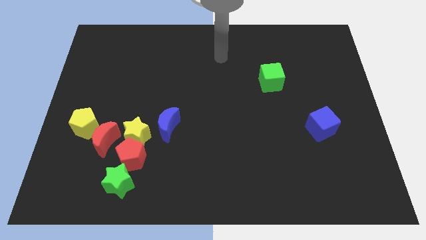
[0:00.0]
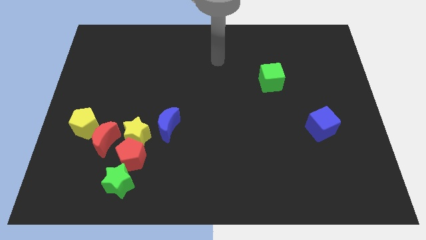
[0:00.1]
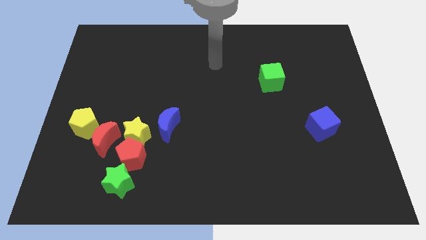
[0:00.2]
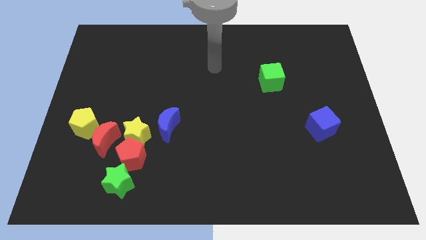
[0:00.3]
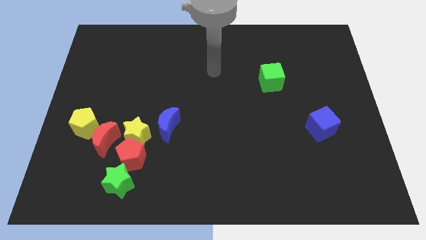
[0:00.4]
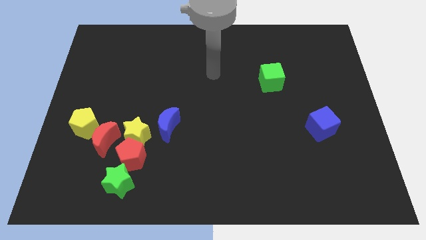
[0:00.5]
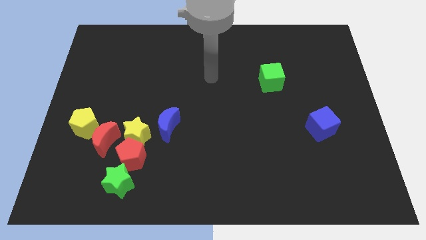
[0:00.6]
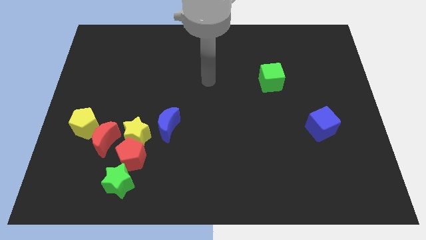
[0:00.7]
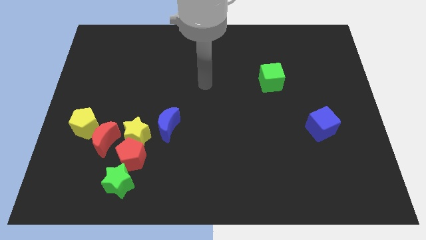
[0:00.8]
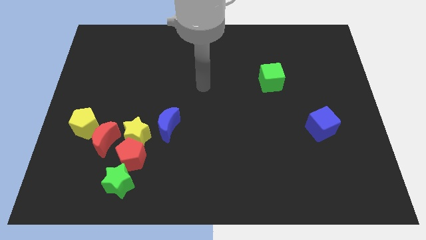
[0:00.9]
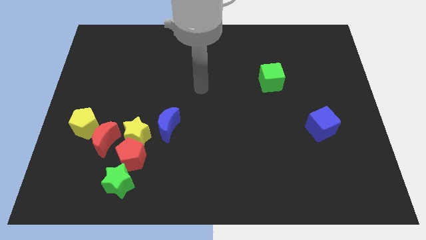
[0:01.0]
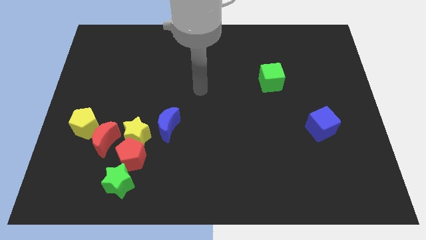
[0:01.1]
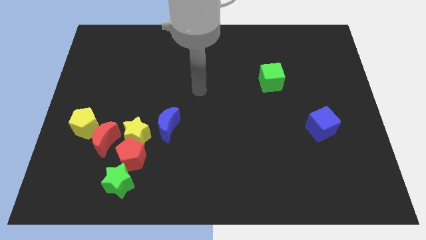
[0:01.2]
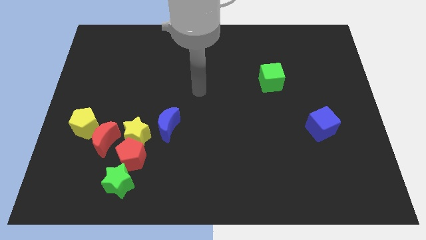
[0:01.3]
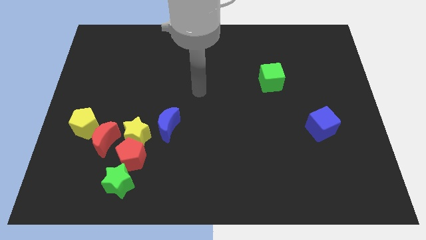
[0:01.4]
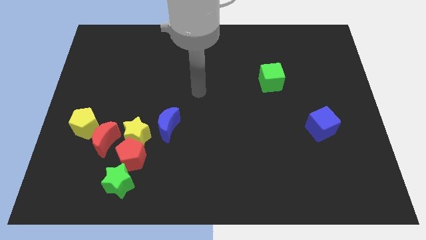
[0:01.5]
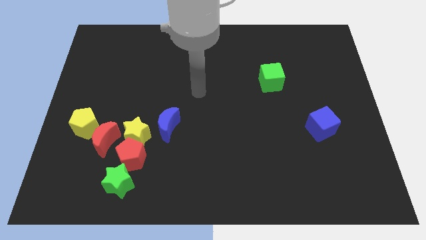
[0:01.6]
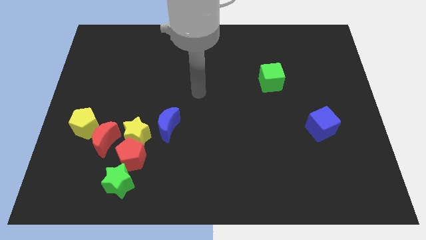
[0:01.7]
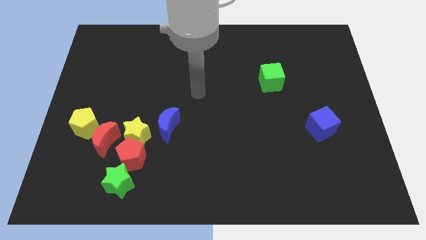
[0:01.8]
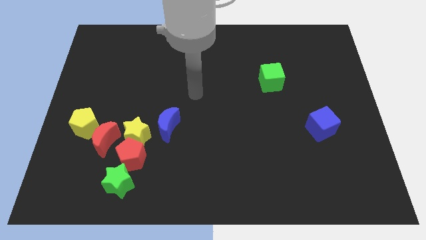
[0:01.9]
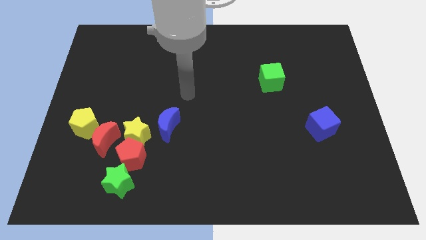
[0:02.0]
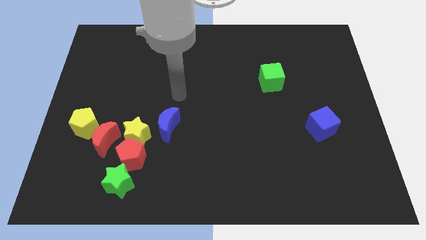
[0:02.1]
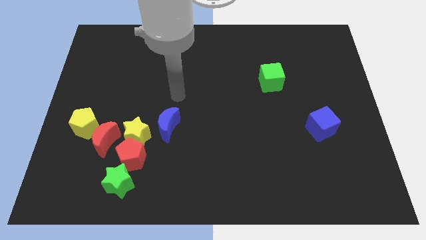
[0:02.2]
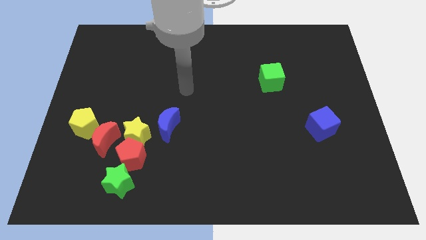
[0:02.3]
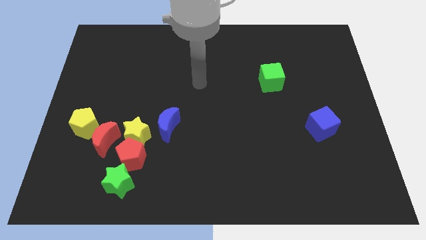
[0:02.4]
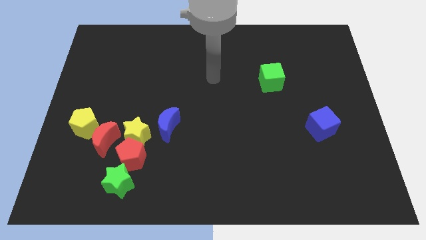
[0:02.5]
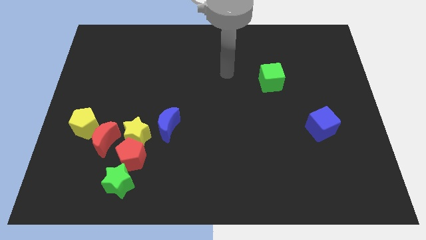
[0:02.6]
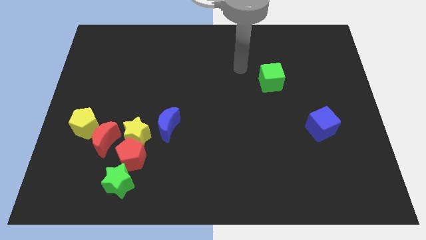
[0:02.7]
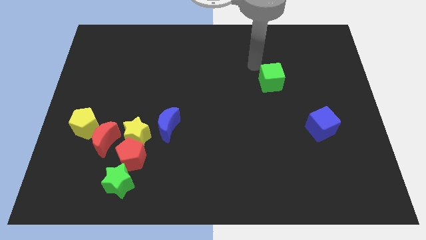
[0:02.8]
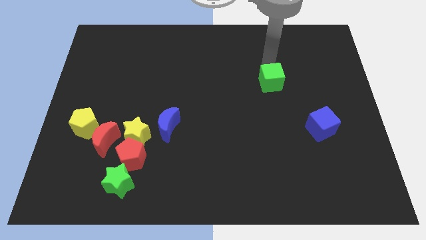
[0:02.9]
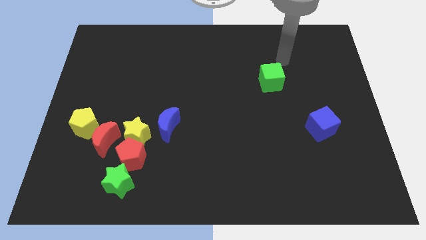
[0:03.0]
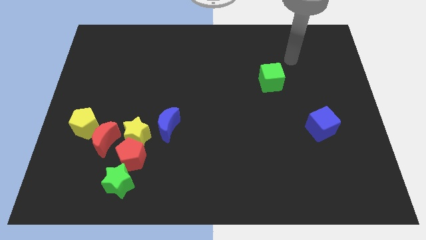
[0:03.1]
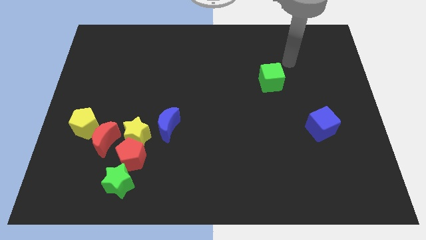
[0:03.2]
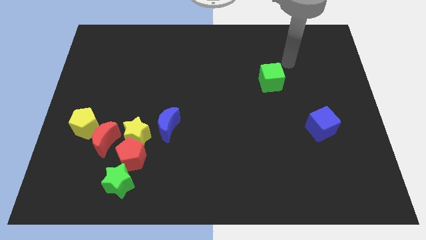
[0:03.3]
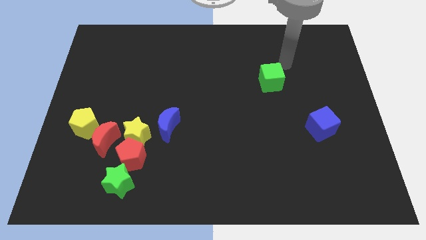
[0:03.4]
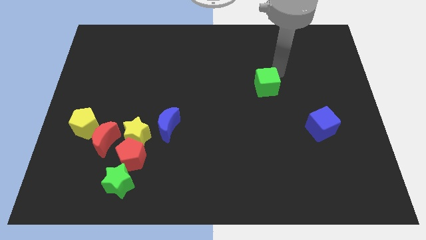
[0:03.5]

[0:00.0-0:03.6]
point the arm at the top right of the green cube

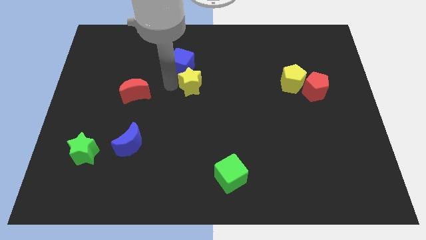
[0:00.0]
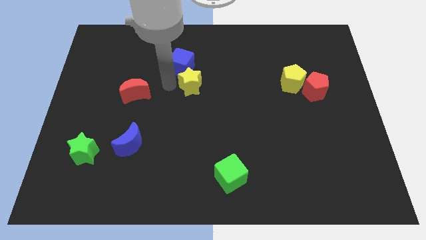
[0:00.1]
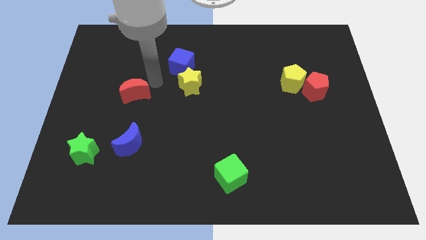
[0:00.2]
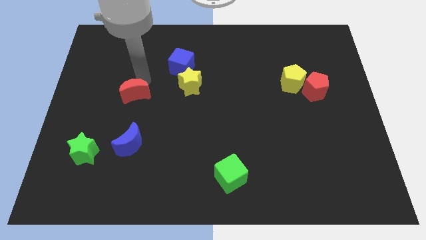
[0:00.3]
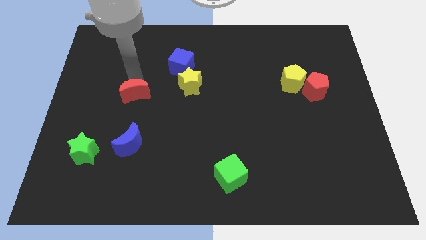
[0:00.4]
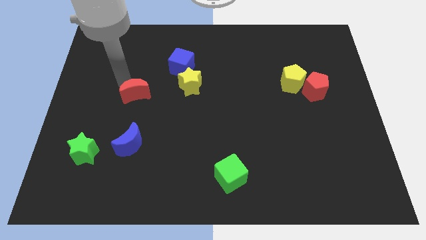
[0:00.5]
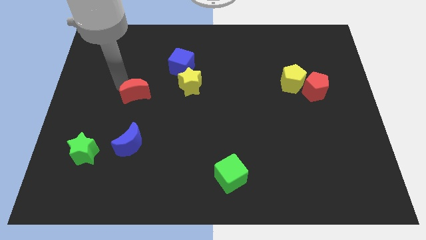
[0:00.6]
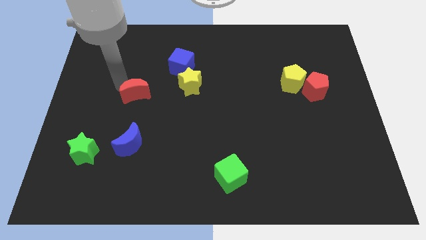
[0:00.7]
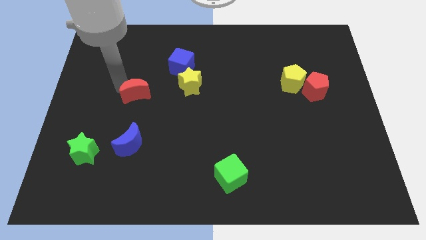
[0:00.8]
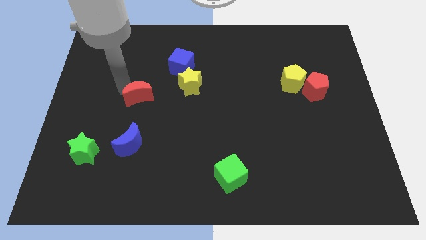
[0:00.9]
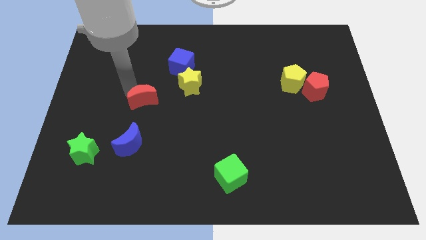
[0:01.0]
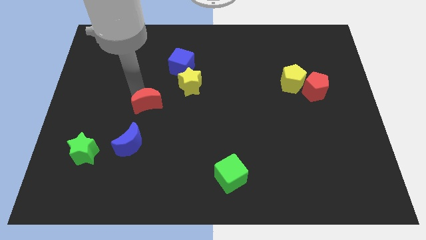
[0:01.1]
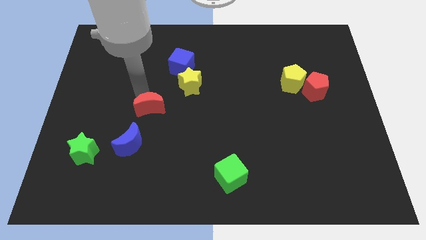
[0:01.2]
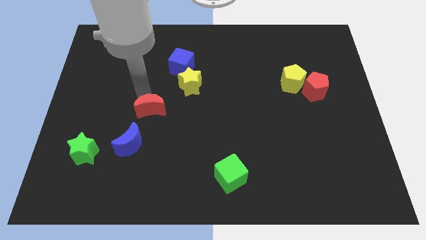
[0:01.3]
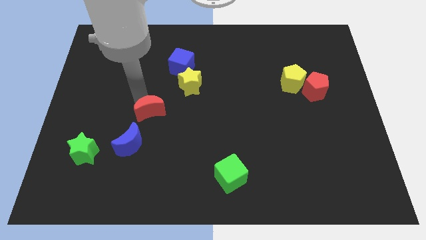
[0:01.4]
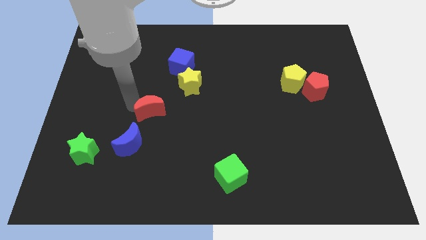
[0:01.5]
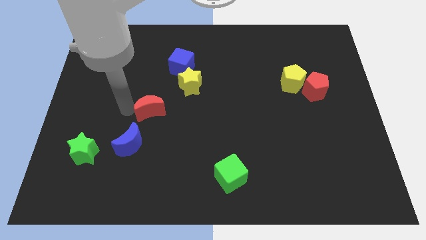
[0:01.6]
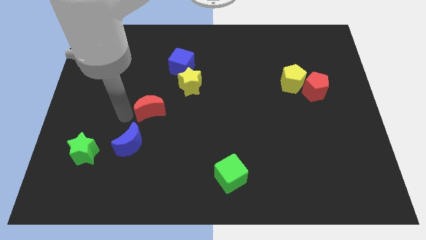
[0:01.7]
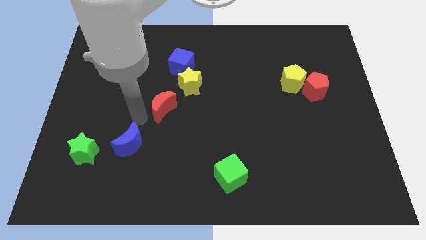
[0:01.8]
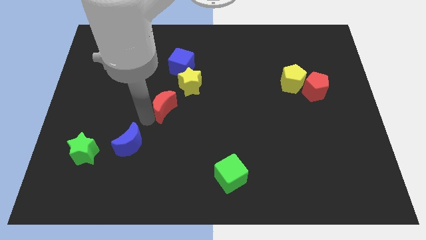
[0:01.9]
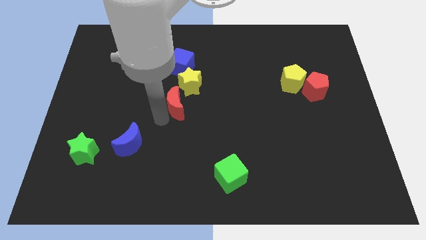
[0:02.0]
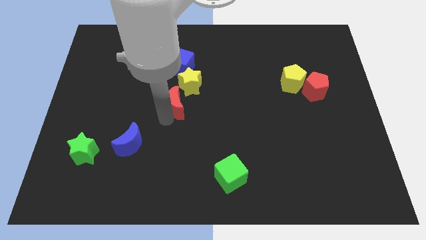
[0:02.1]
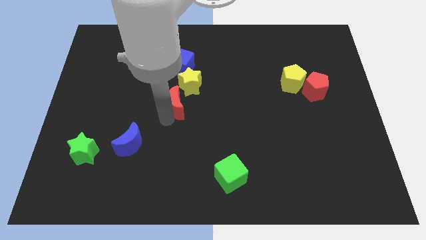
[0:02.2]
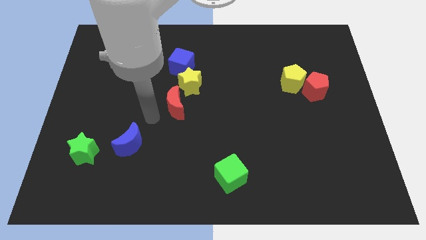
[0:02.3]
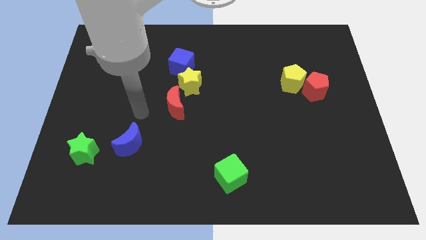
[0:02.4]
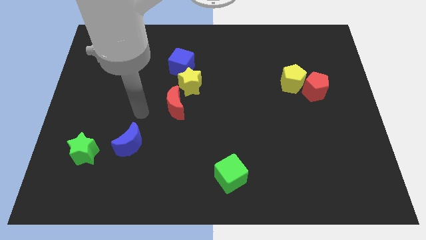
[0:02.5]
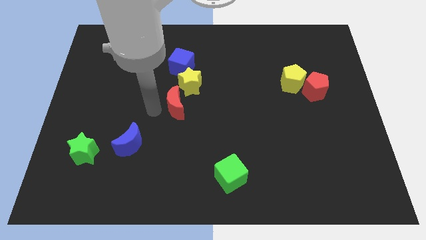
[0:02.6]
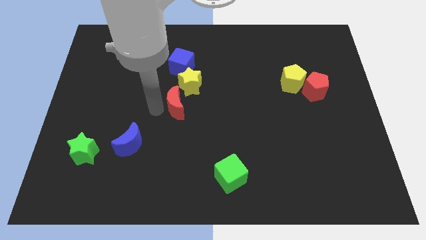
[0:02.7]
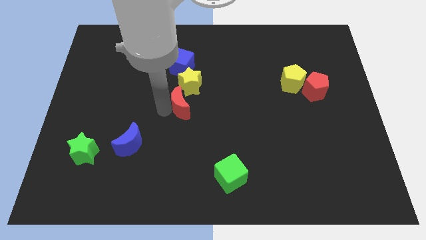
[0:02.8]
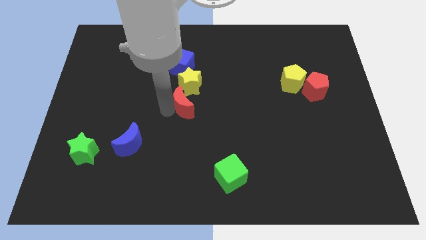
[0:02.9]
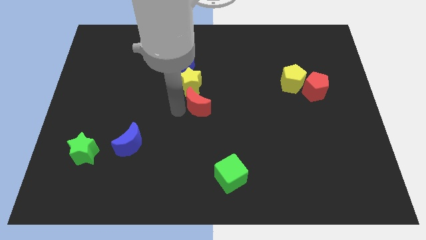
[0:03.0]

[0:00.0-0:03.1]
slide the red crescent below the yellow star

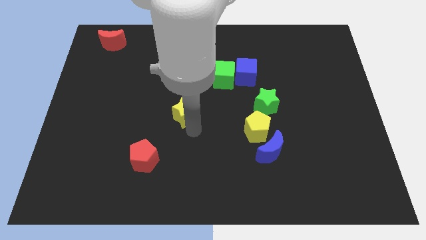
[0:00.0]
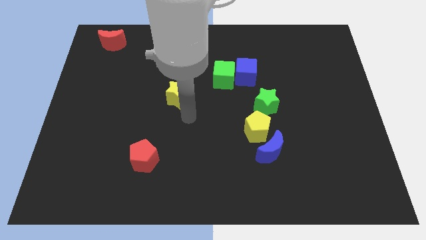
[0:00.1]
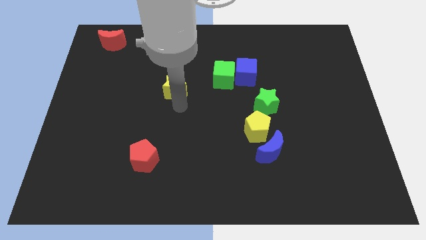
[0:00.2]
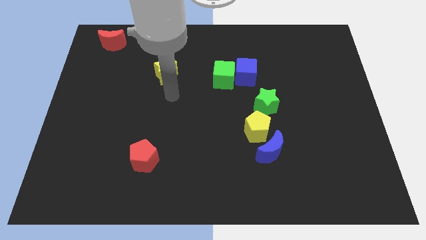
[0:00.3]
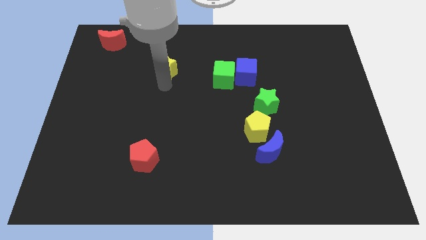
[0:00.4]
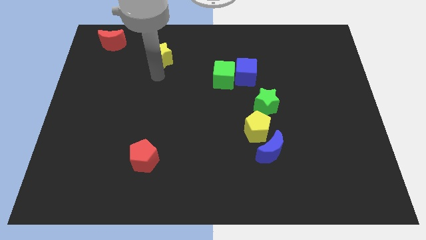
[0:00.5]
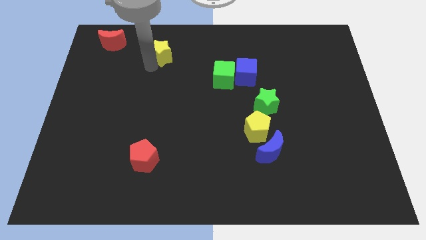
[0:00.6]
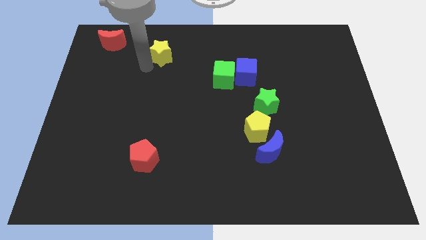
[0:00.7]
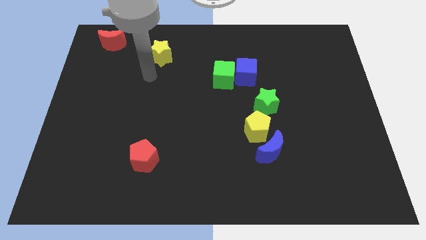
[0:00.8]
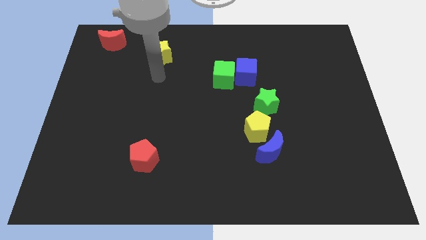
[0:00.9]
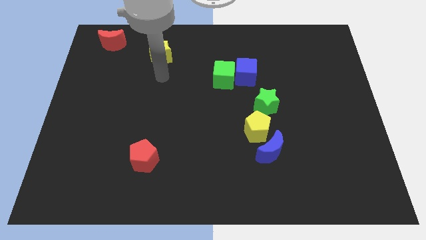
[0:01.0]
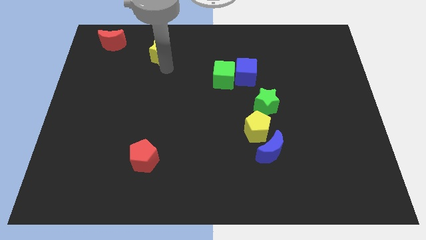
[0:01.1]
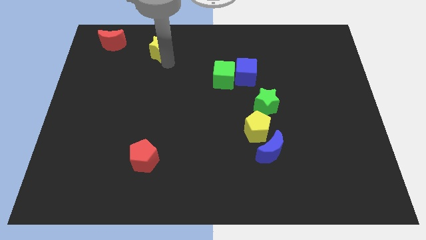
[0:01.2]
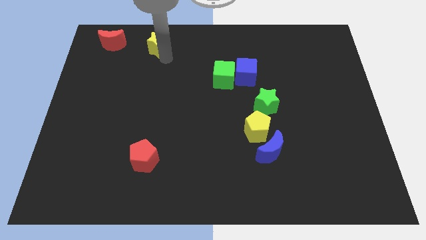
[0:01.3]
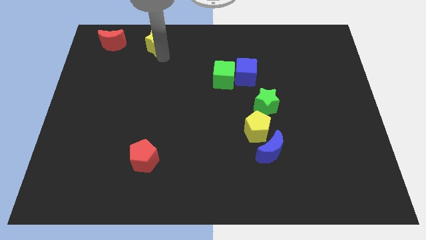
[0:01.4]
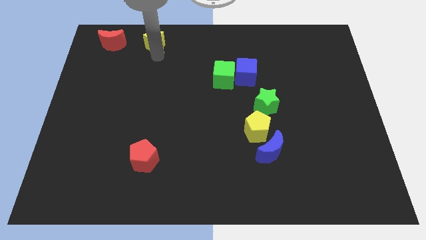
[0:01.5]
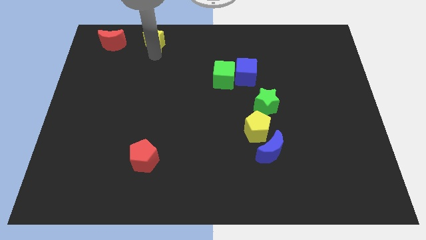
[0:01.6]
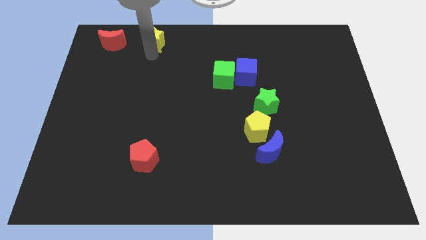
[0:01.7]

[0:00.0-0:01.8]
move the yellow star to the right of the red crescent

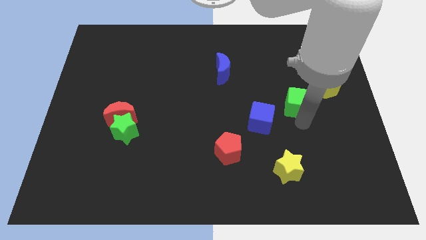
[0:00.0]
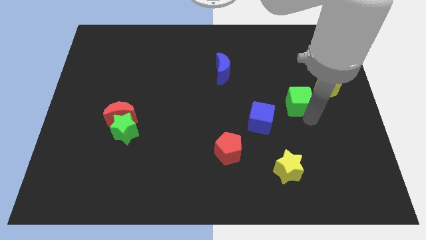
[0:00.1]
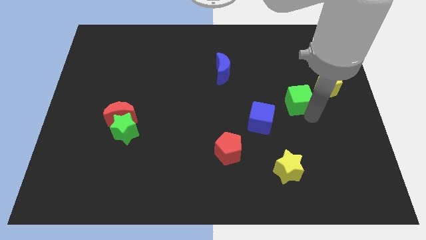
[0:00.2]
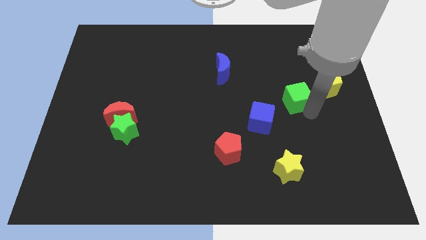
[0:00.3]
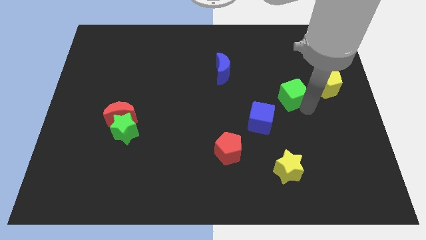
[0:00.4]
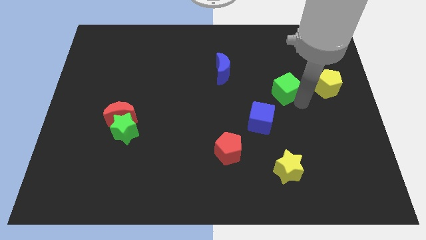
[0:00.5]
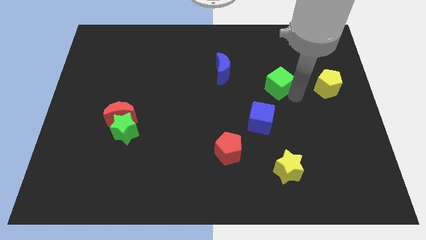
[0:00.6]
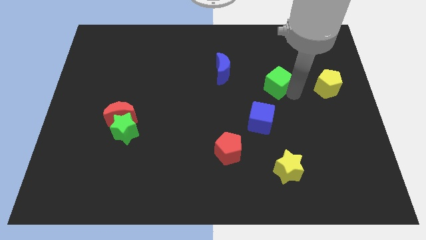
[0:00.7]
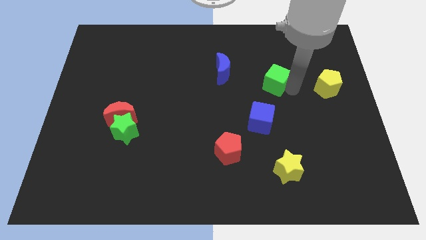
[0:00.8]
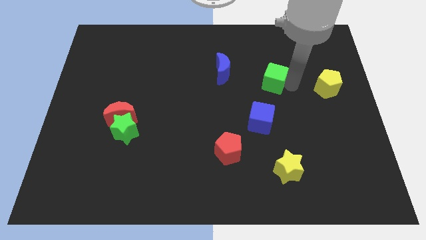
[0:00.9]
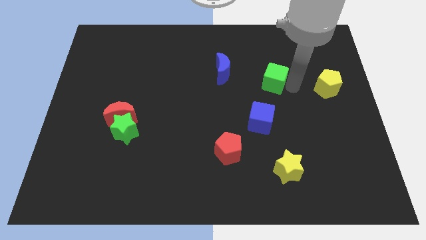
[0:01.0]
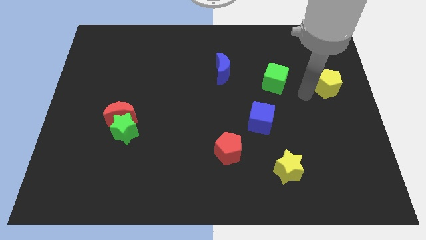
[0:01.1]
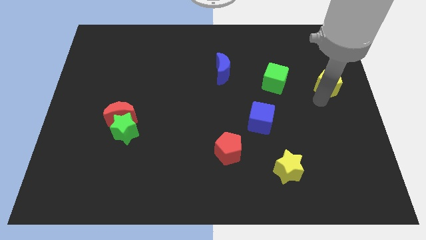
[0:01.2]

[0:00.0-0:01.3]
push the green cube at the top of the blue cube
